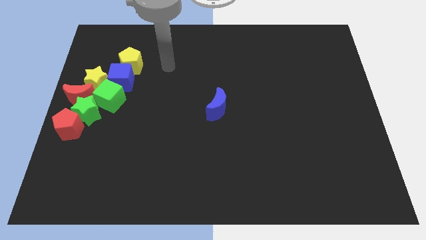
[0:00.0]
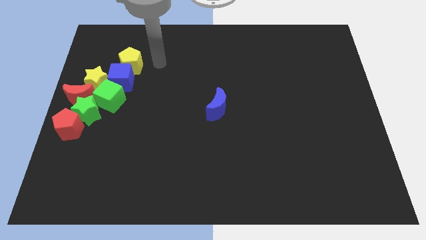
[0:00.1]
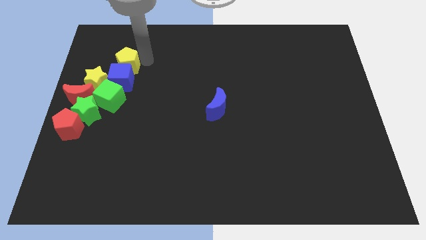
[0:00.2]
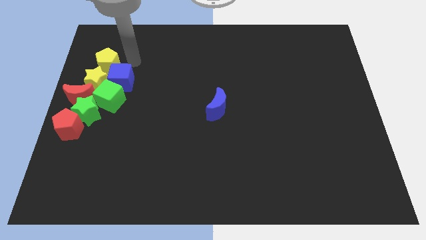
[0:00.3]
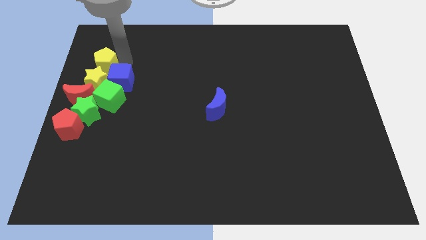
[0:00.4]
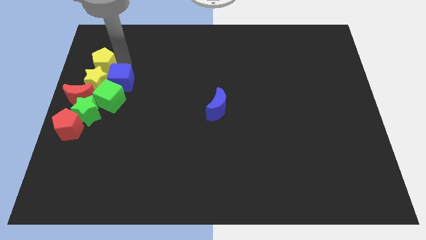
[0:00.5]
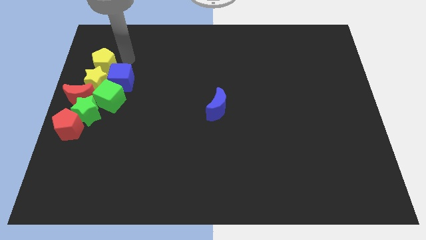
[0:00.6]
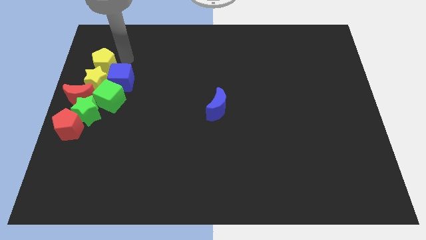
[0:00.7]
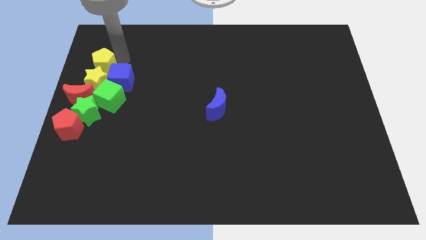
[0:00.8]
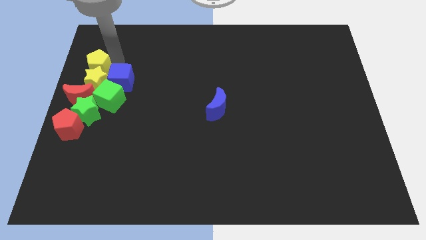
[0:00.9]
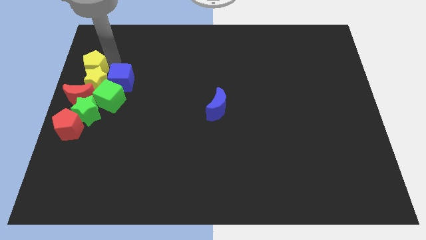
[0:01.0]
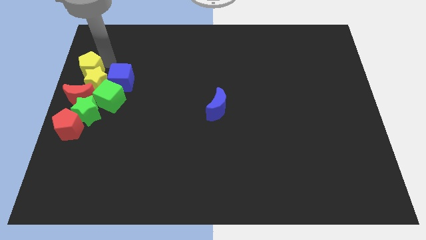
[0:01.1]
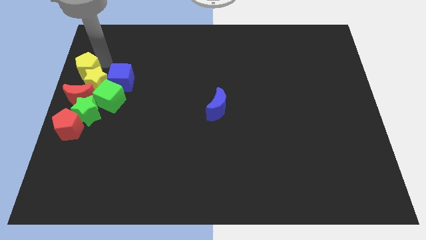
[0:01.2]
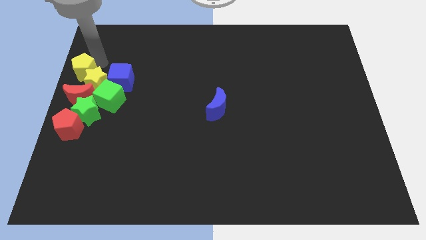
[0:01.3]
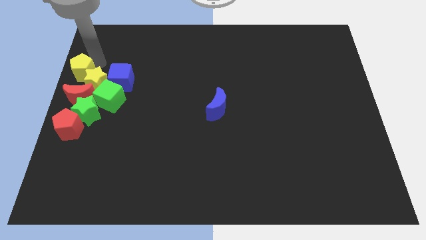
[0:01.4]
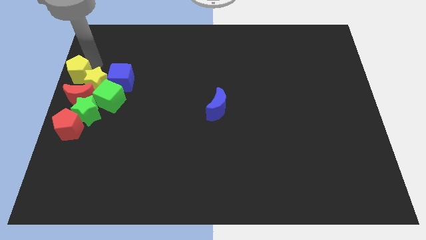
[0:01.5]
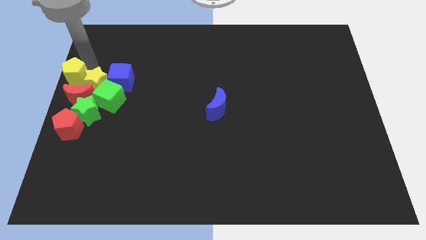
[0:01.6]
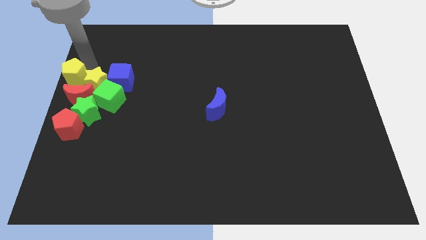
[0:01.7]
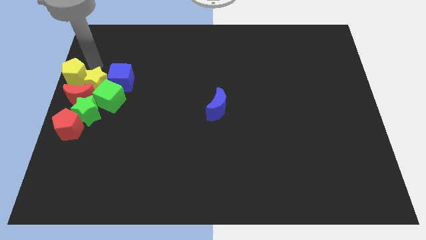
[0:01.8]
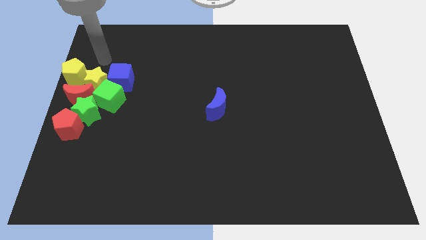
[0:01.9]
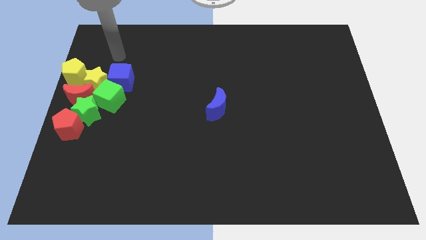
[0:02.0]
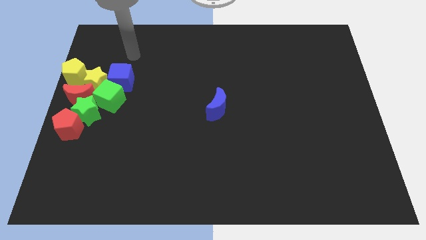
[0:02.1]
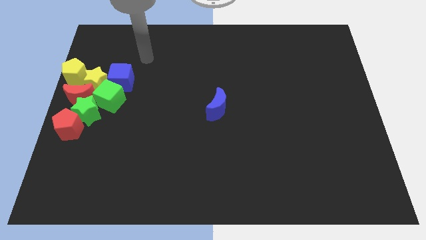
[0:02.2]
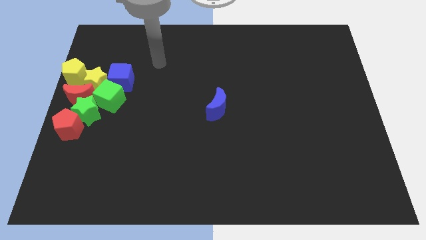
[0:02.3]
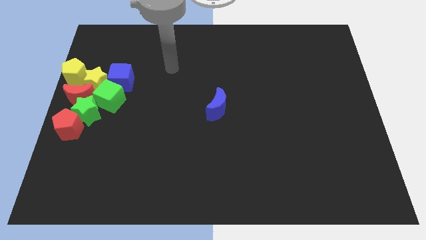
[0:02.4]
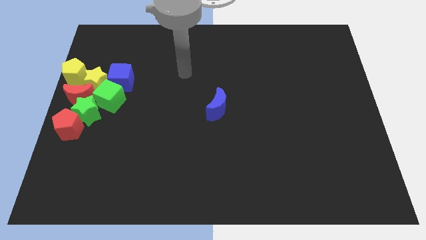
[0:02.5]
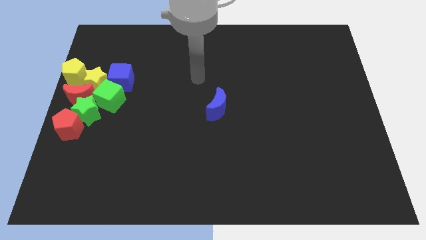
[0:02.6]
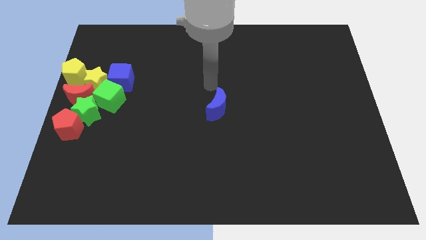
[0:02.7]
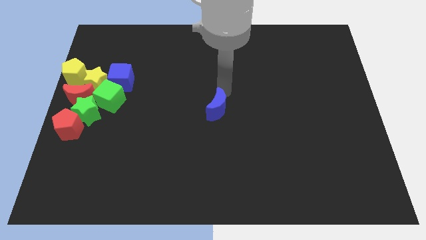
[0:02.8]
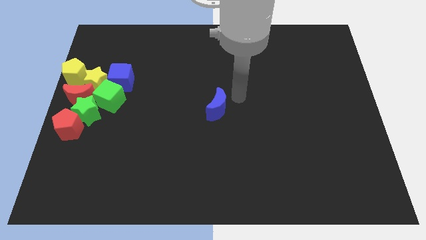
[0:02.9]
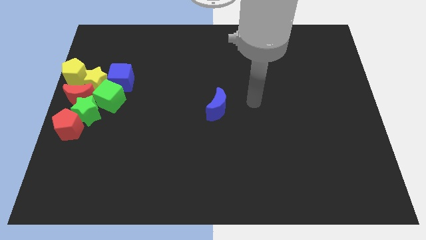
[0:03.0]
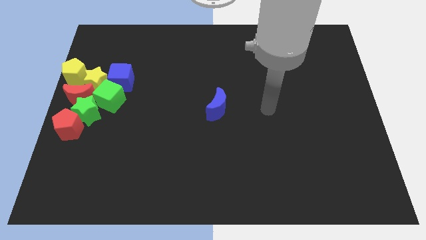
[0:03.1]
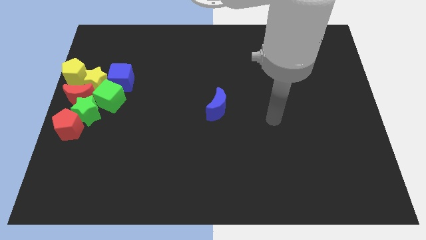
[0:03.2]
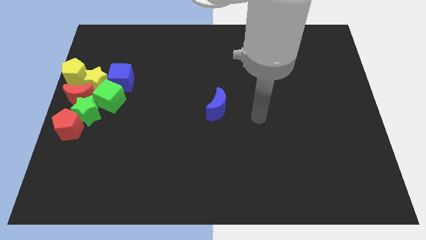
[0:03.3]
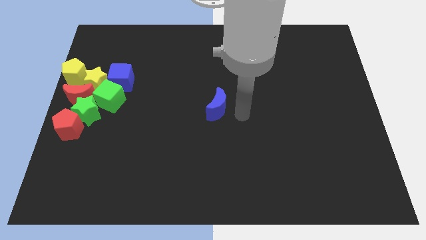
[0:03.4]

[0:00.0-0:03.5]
move the yellow pentagon to the left of the yellow star

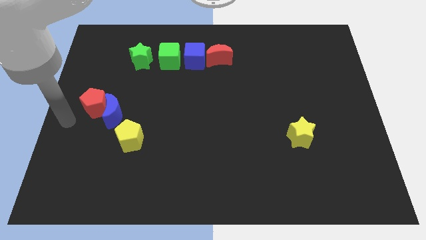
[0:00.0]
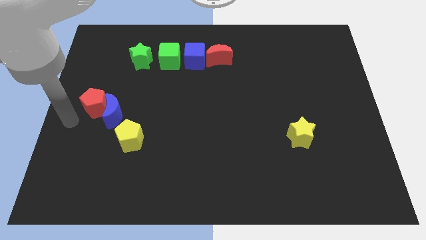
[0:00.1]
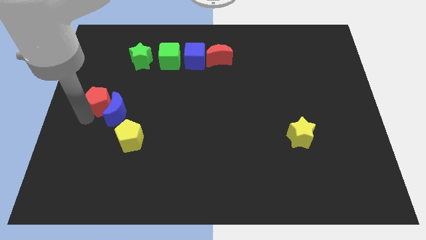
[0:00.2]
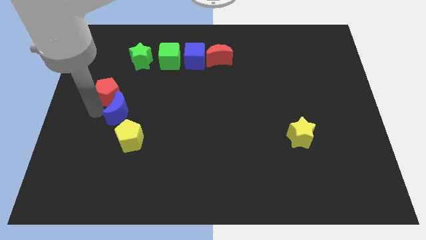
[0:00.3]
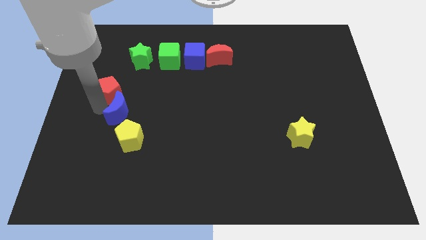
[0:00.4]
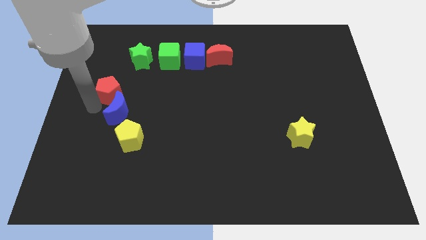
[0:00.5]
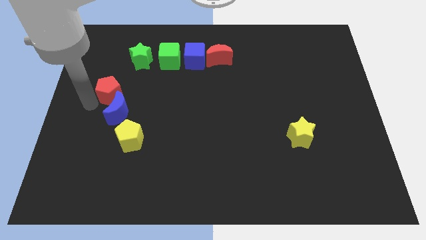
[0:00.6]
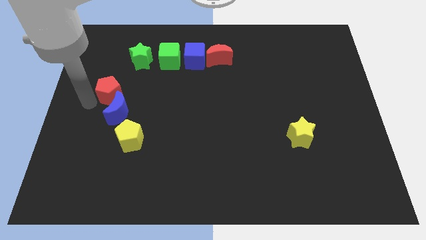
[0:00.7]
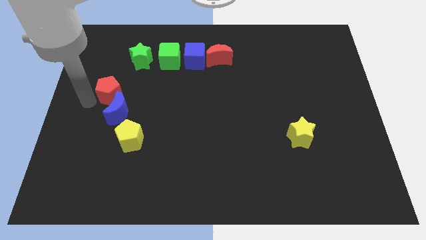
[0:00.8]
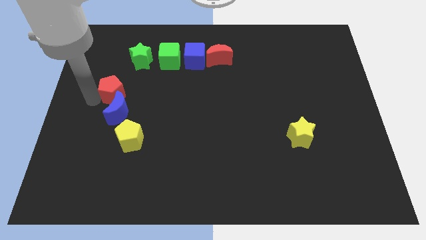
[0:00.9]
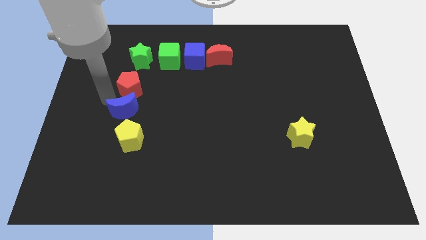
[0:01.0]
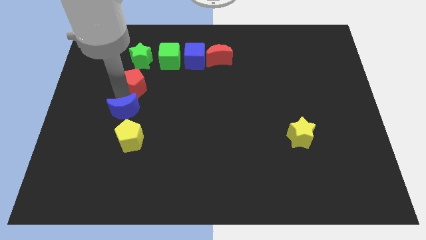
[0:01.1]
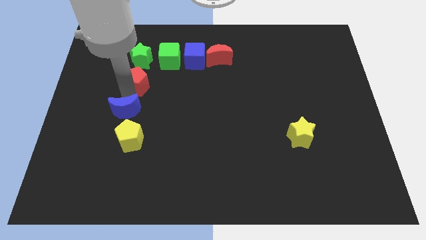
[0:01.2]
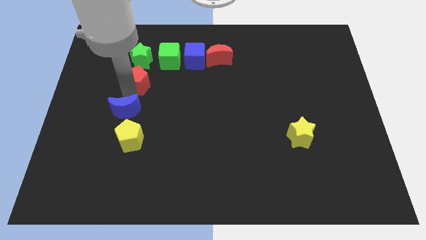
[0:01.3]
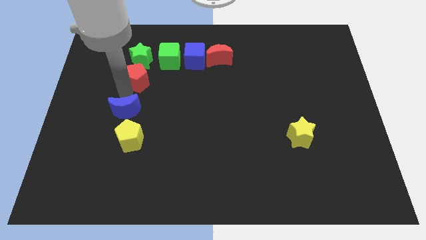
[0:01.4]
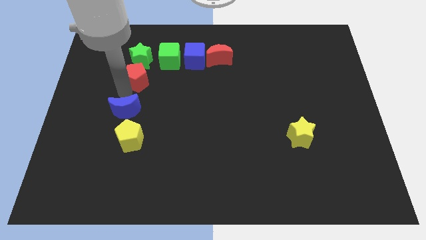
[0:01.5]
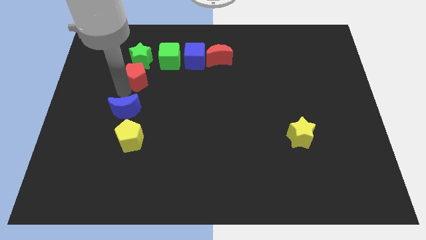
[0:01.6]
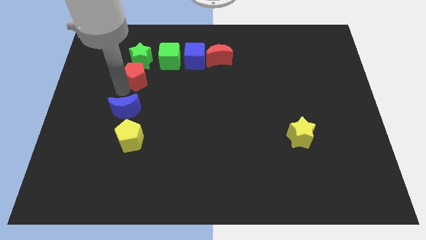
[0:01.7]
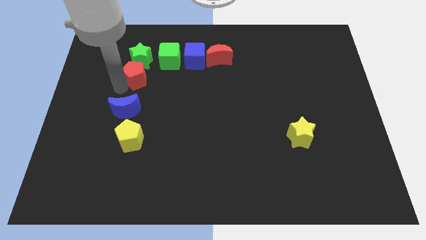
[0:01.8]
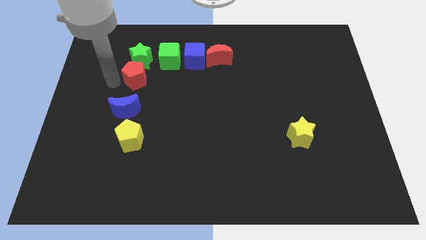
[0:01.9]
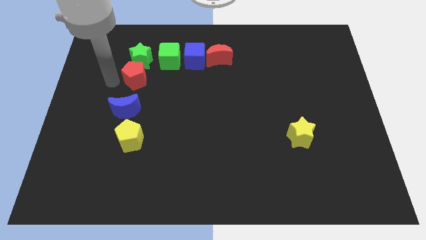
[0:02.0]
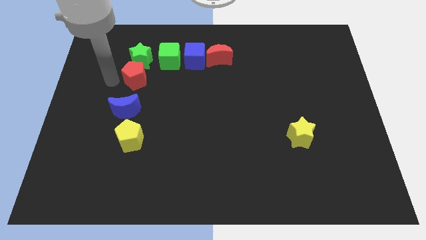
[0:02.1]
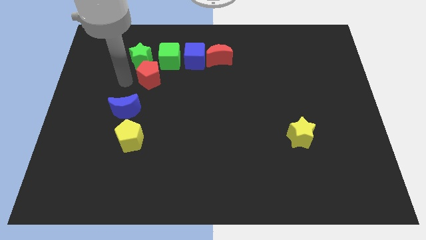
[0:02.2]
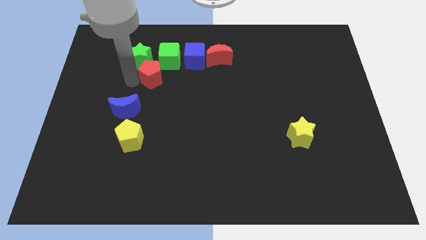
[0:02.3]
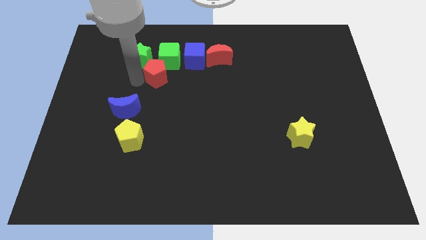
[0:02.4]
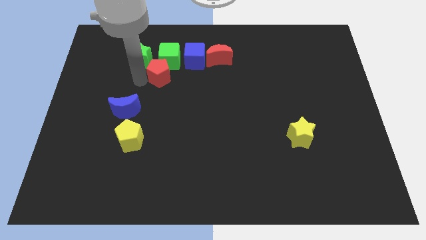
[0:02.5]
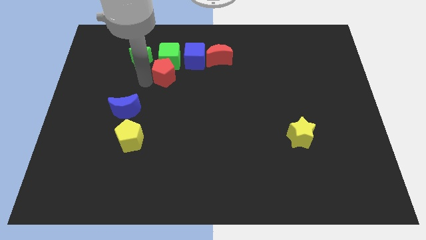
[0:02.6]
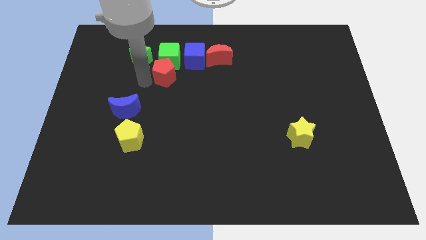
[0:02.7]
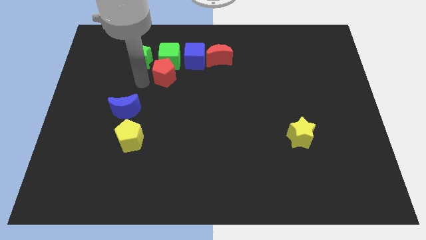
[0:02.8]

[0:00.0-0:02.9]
move the red pentagon to the bottom side of the green cube

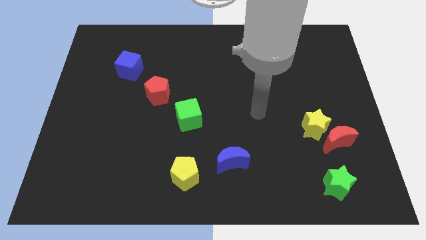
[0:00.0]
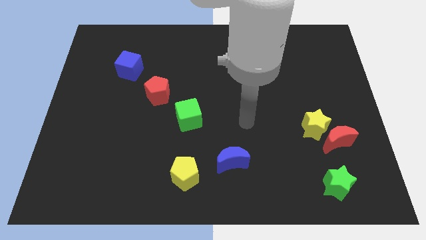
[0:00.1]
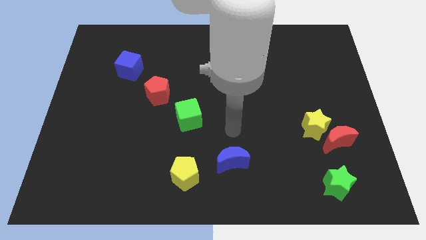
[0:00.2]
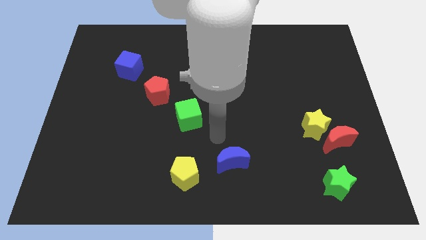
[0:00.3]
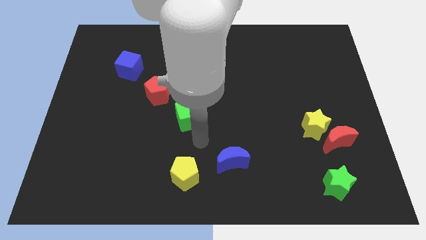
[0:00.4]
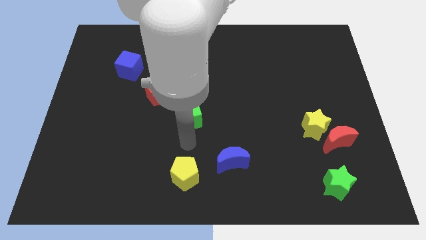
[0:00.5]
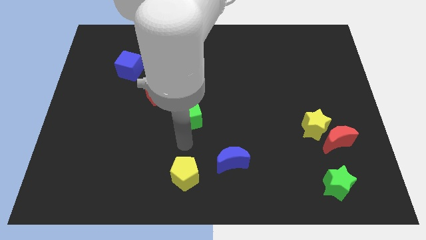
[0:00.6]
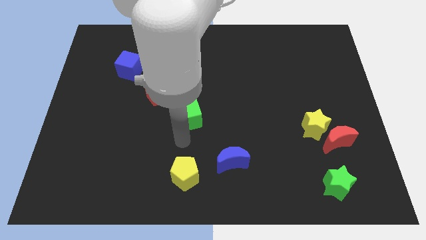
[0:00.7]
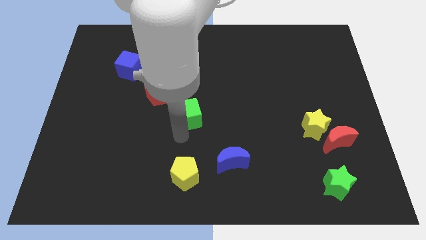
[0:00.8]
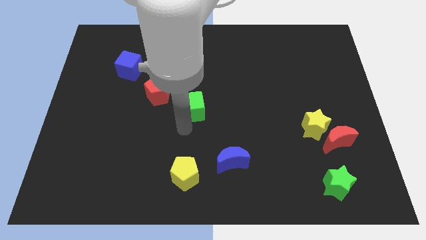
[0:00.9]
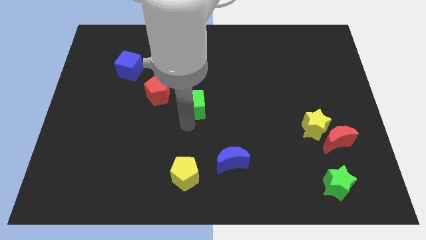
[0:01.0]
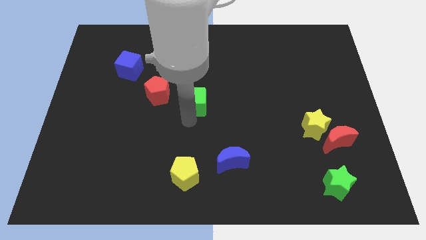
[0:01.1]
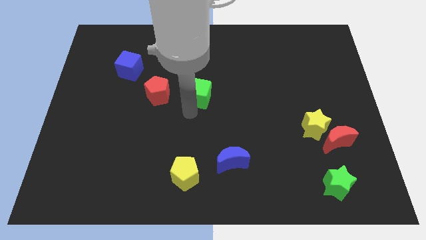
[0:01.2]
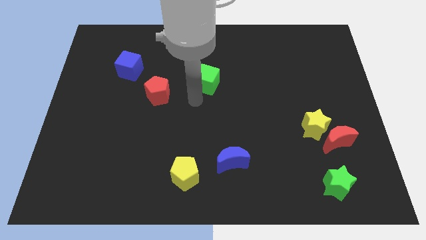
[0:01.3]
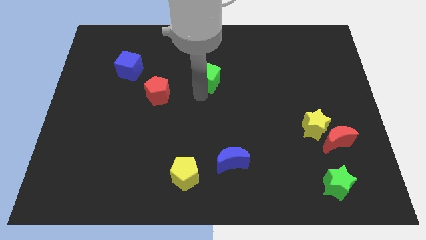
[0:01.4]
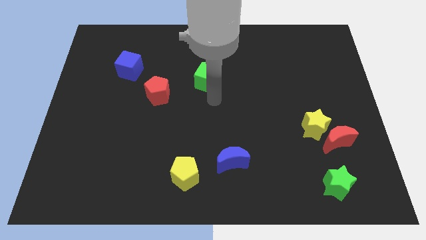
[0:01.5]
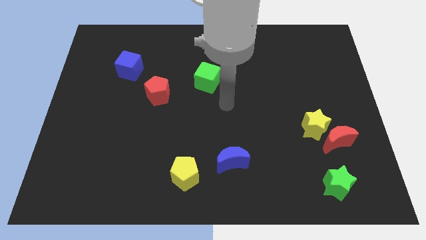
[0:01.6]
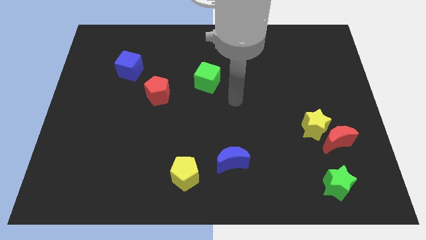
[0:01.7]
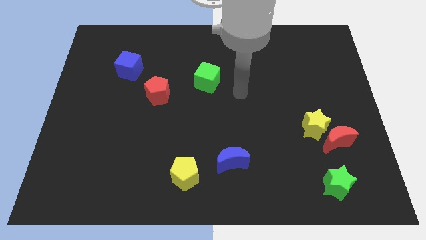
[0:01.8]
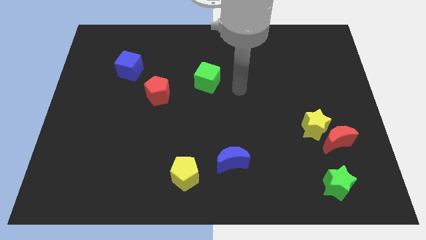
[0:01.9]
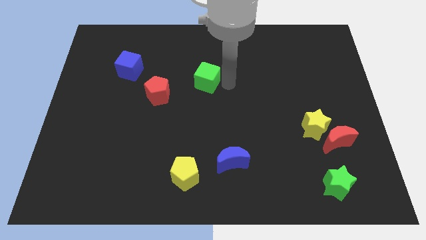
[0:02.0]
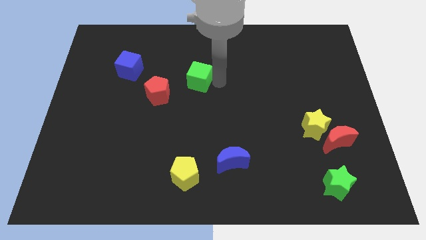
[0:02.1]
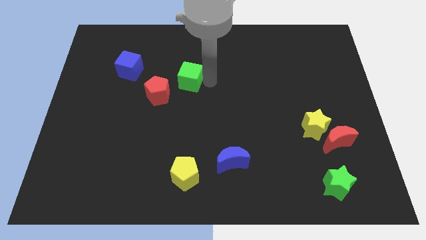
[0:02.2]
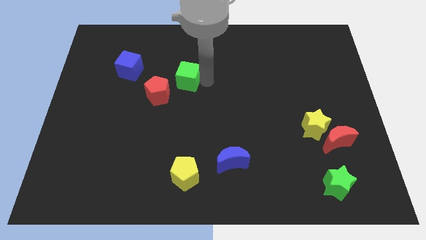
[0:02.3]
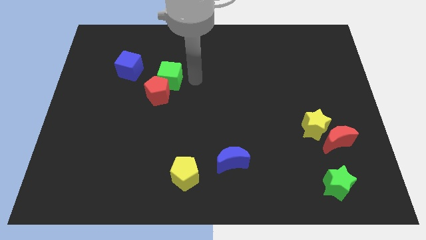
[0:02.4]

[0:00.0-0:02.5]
move the green cube above the red pentagon

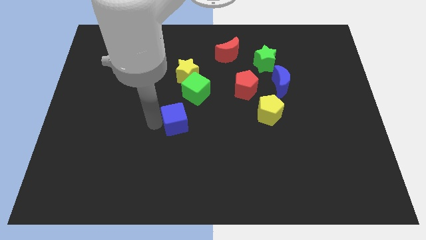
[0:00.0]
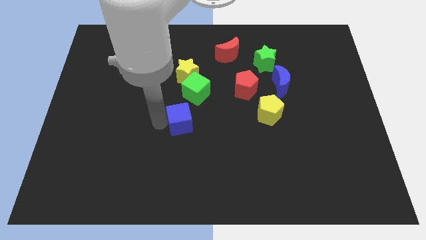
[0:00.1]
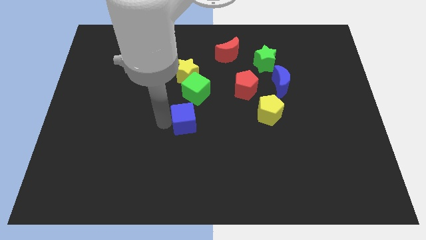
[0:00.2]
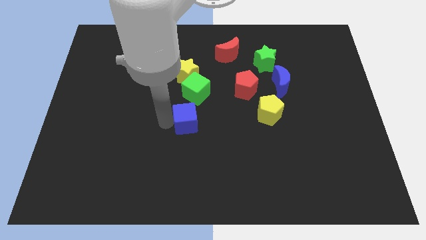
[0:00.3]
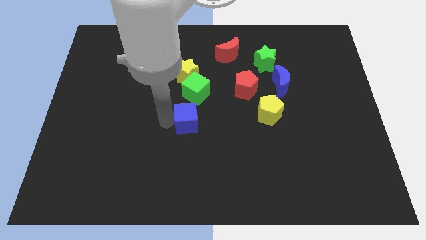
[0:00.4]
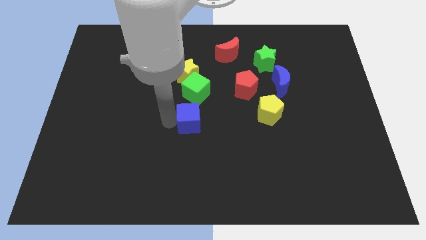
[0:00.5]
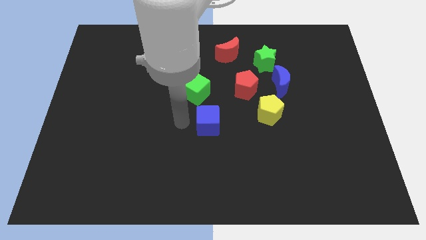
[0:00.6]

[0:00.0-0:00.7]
place the blue cube below the green cube
